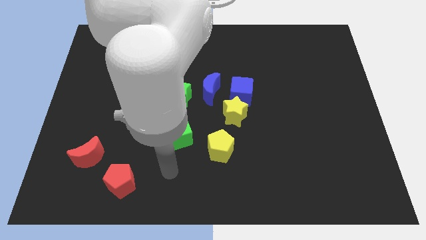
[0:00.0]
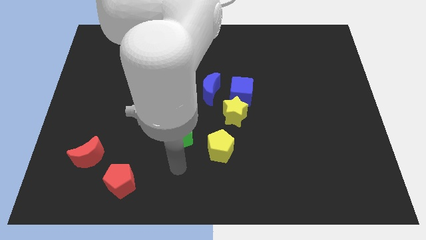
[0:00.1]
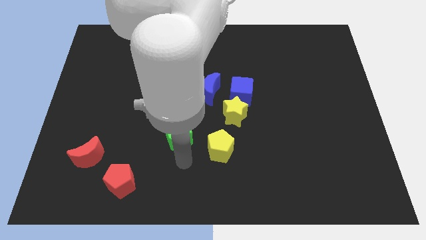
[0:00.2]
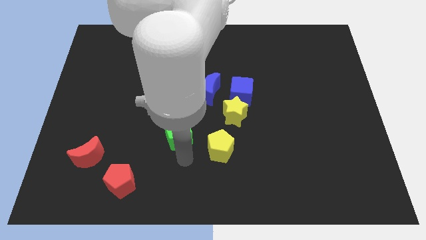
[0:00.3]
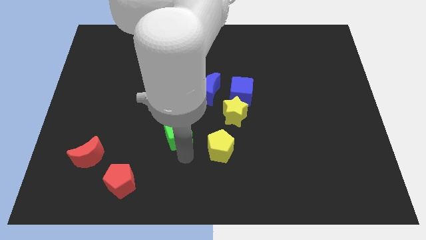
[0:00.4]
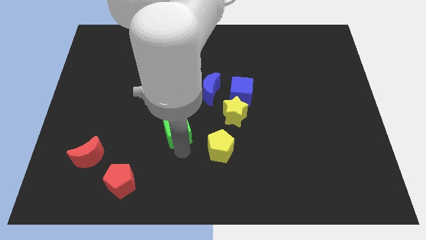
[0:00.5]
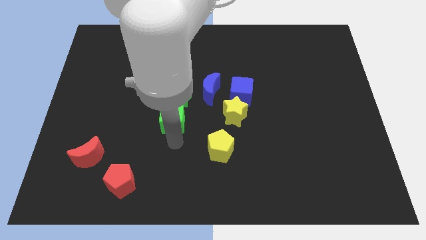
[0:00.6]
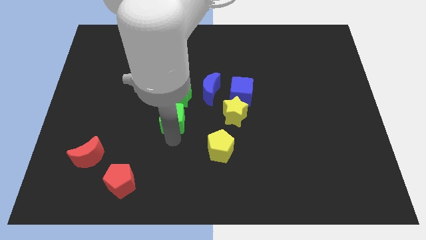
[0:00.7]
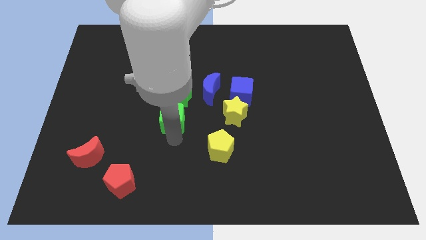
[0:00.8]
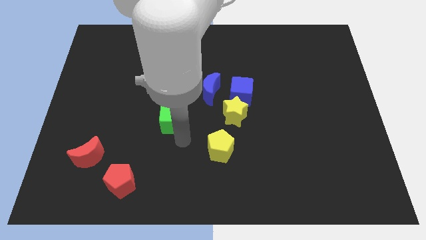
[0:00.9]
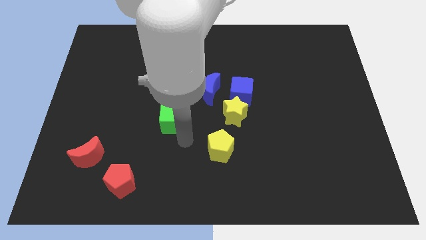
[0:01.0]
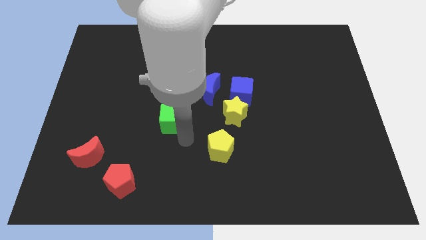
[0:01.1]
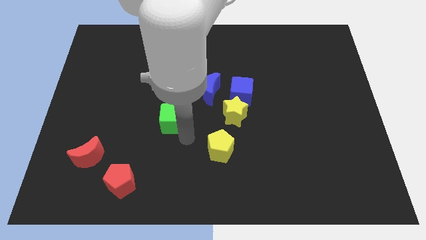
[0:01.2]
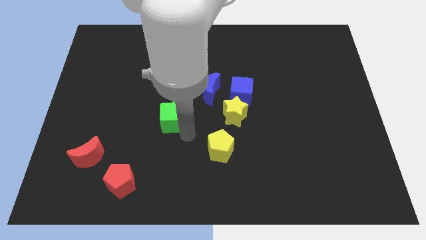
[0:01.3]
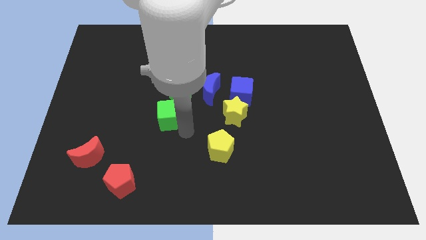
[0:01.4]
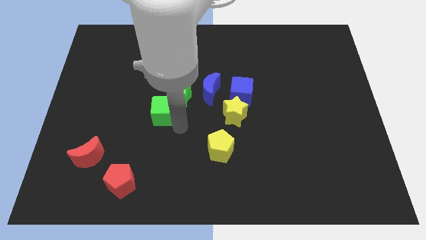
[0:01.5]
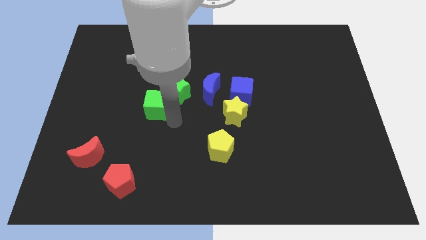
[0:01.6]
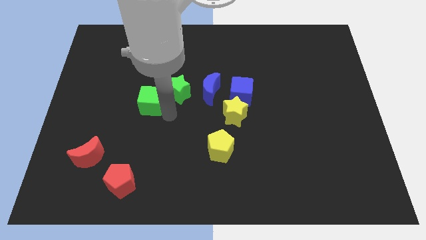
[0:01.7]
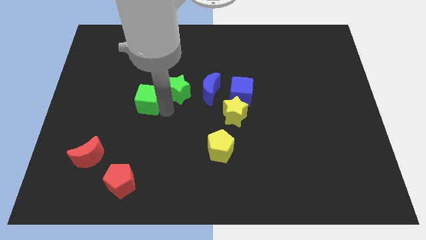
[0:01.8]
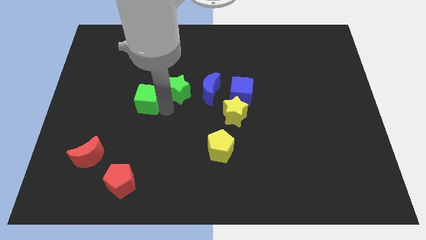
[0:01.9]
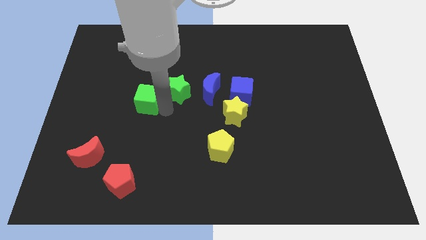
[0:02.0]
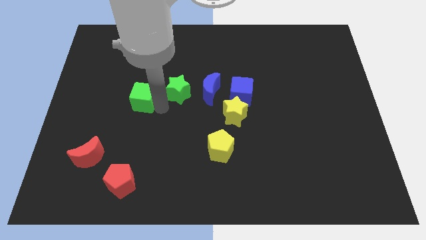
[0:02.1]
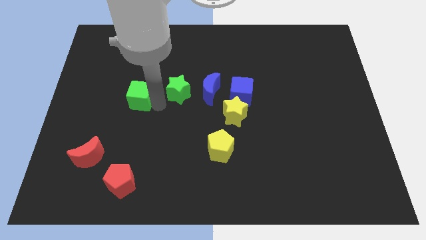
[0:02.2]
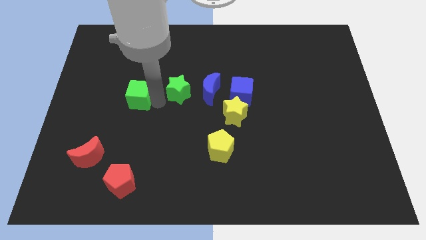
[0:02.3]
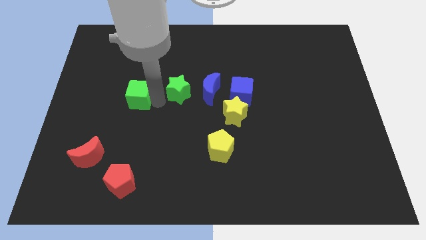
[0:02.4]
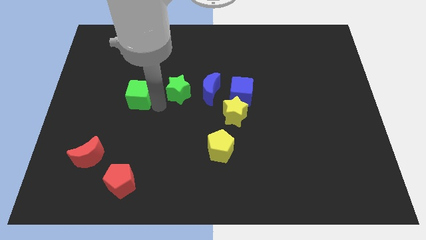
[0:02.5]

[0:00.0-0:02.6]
move the green cube to the left of the green star

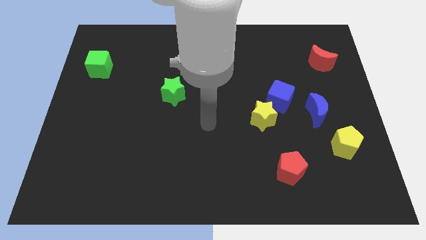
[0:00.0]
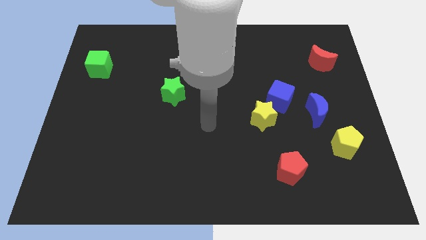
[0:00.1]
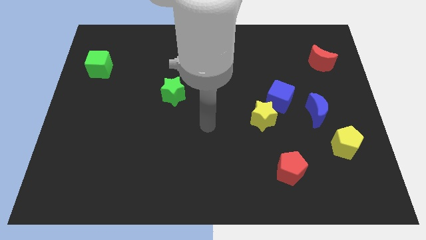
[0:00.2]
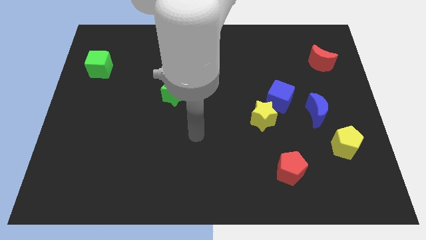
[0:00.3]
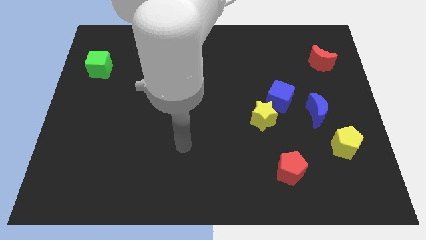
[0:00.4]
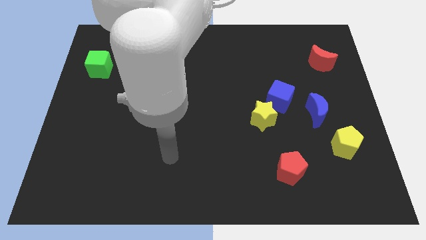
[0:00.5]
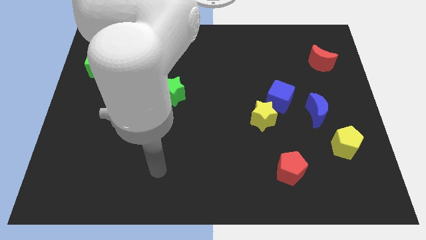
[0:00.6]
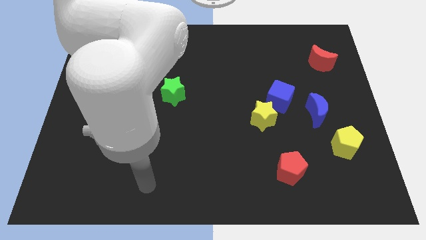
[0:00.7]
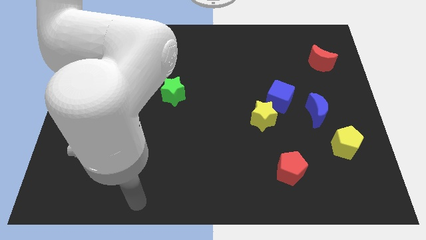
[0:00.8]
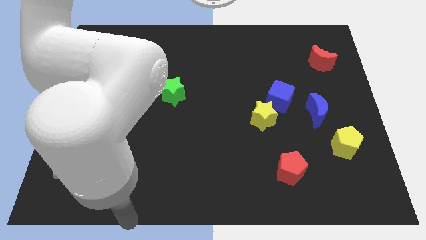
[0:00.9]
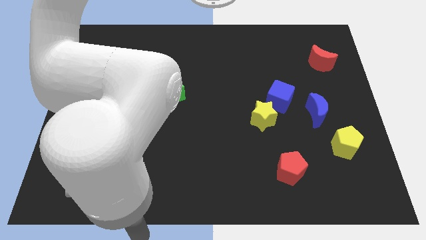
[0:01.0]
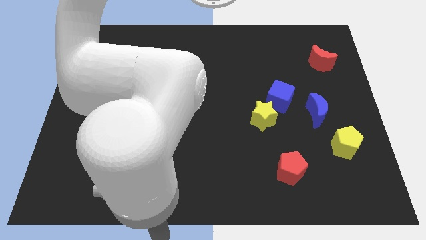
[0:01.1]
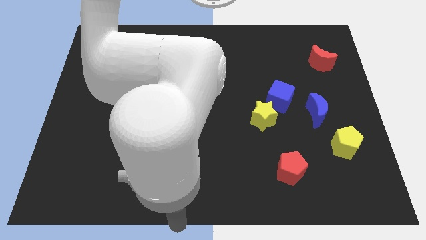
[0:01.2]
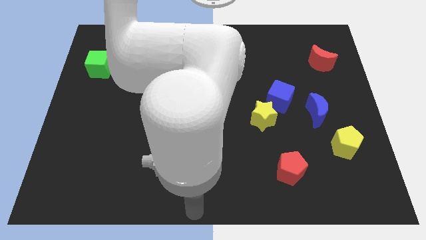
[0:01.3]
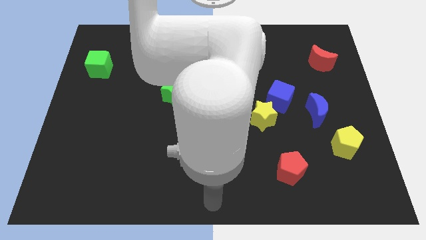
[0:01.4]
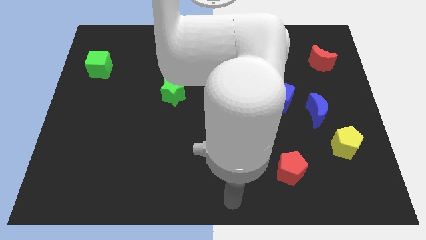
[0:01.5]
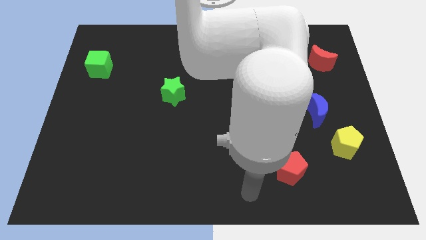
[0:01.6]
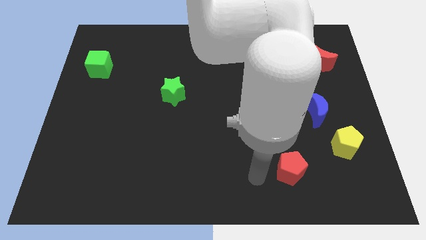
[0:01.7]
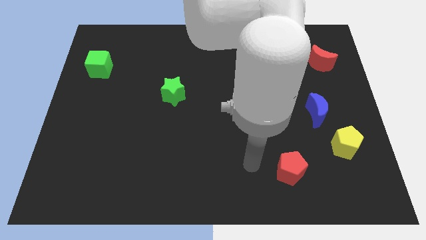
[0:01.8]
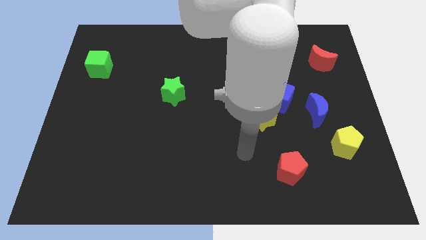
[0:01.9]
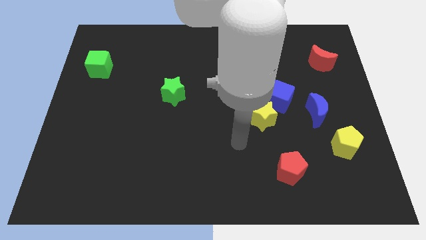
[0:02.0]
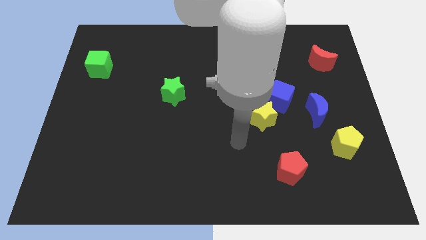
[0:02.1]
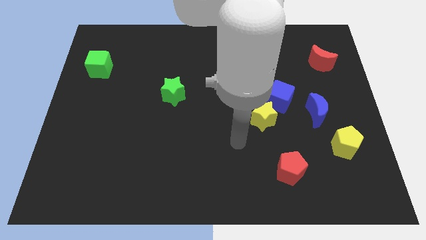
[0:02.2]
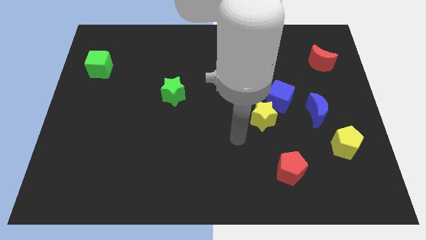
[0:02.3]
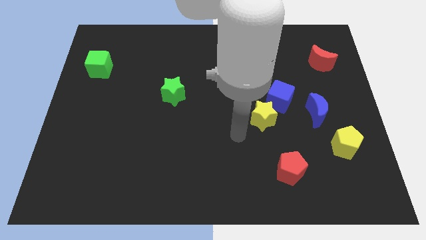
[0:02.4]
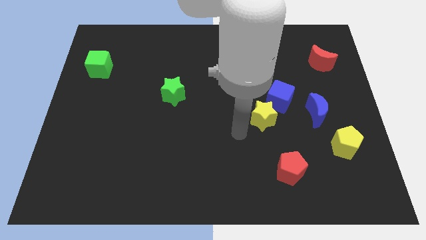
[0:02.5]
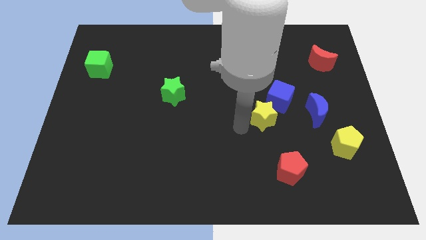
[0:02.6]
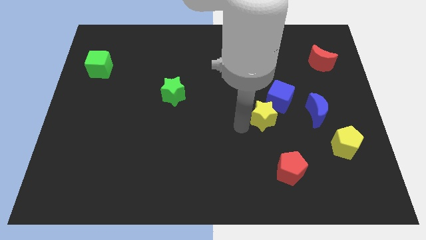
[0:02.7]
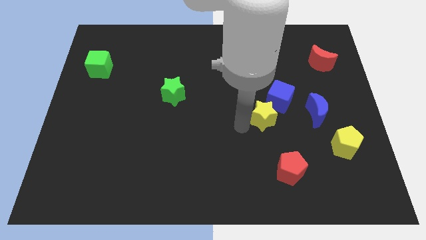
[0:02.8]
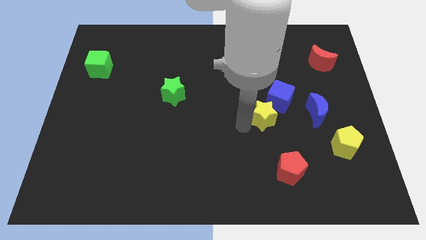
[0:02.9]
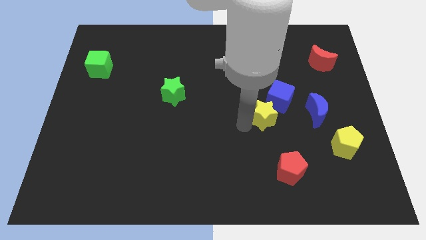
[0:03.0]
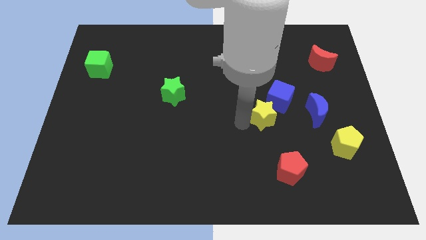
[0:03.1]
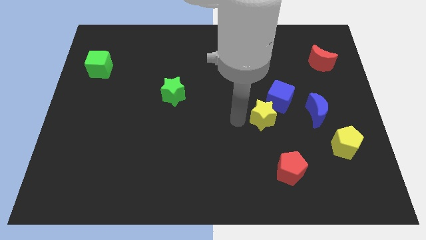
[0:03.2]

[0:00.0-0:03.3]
touch the bottom of yellow star

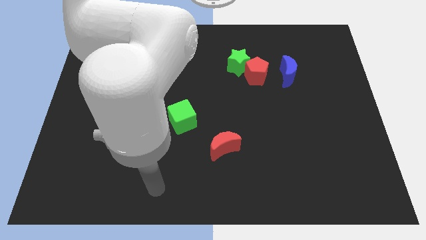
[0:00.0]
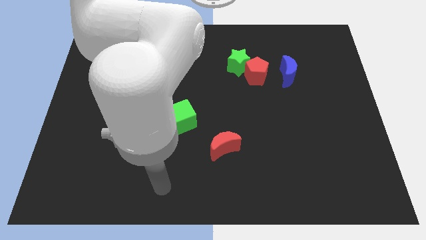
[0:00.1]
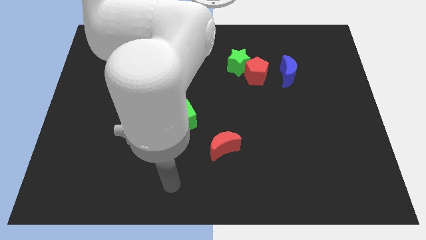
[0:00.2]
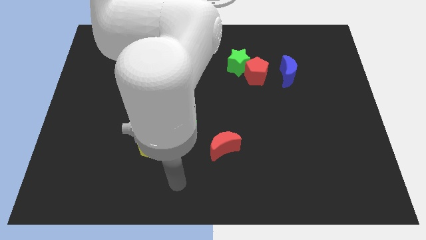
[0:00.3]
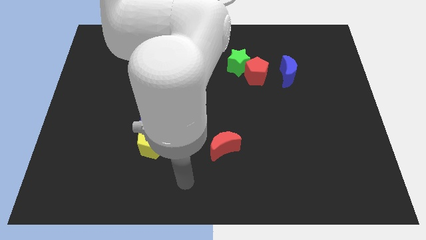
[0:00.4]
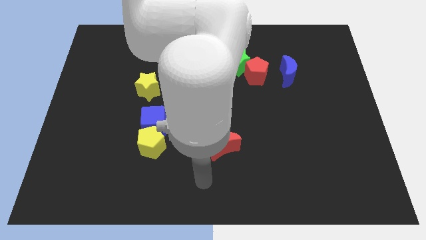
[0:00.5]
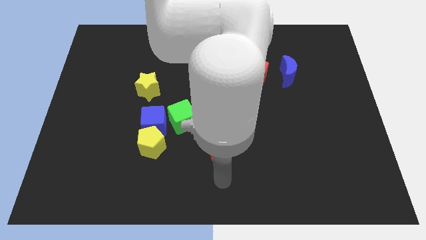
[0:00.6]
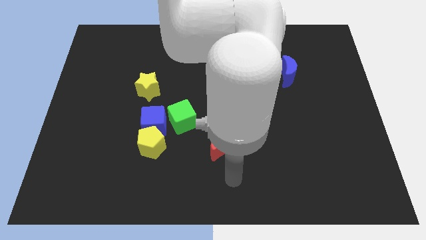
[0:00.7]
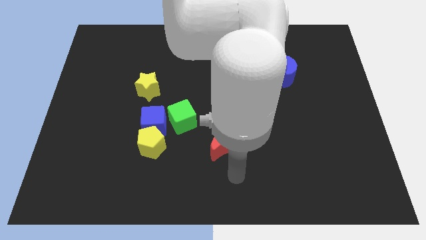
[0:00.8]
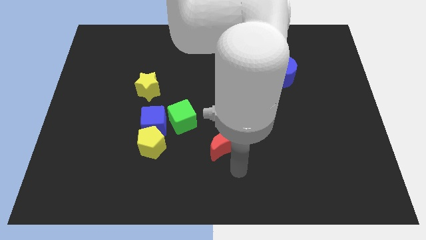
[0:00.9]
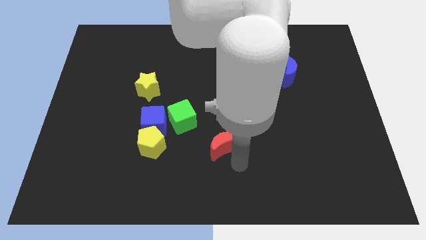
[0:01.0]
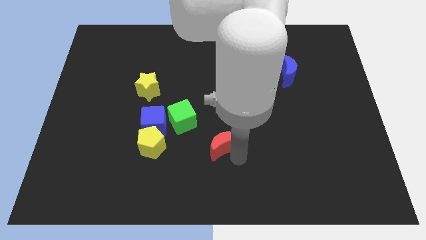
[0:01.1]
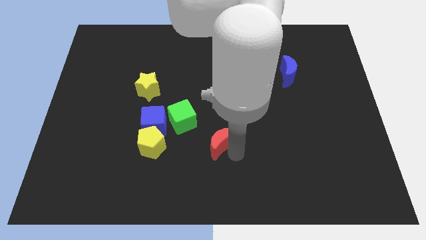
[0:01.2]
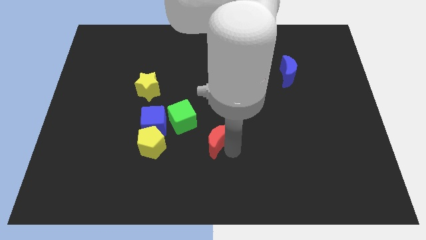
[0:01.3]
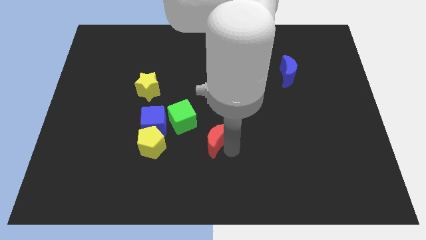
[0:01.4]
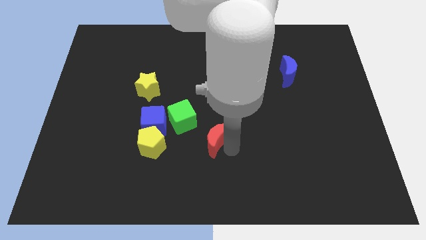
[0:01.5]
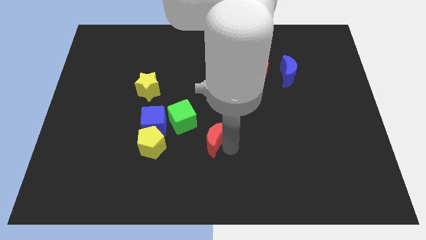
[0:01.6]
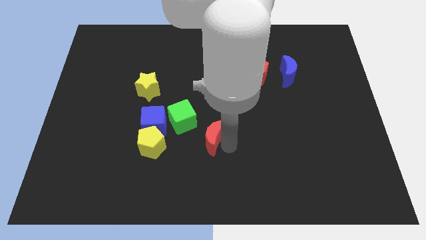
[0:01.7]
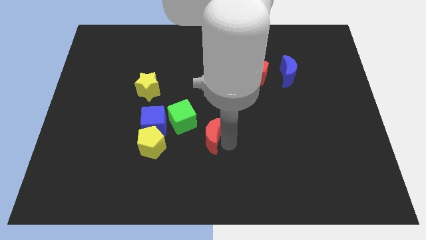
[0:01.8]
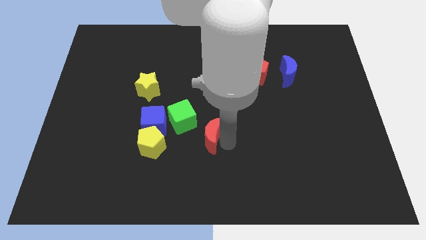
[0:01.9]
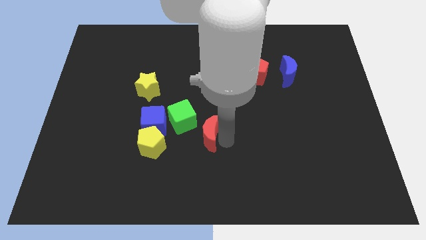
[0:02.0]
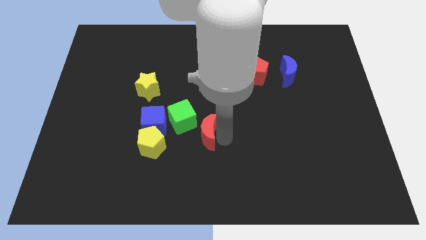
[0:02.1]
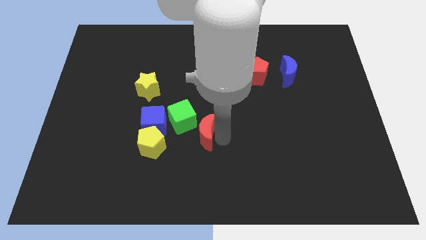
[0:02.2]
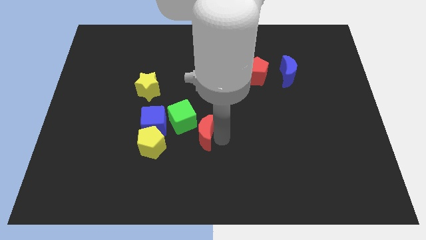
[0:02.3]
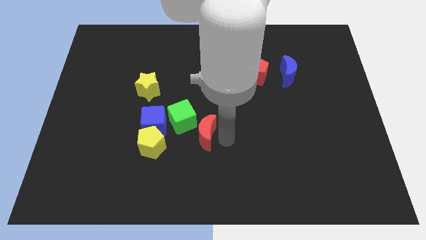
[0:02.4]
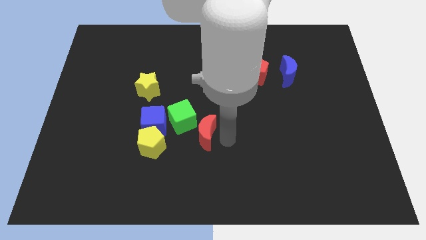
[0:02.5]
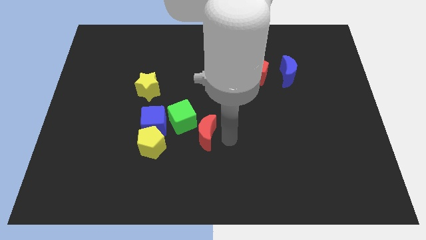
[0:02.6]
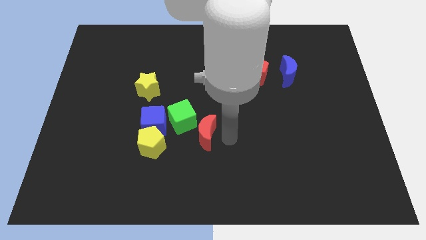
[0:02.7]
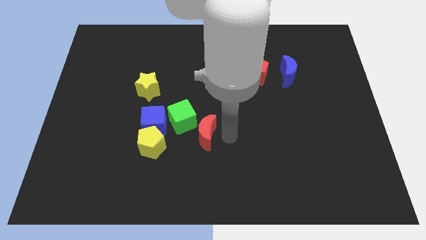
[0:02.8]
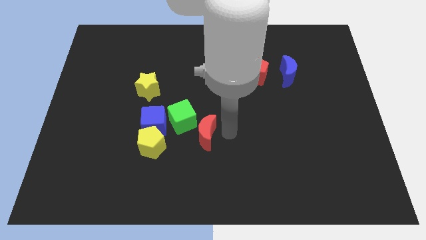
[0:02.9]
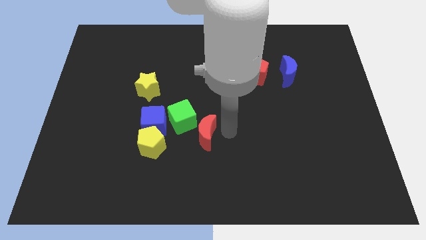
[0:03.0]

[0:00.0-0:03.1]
push the red moon diagonal to green cube
